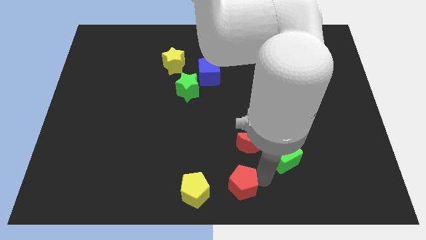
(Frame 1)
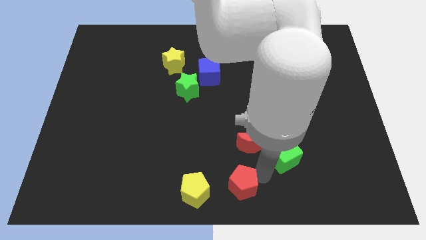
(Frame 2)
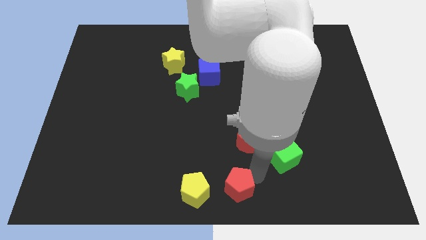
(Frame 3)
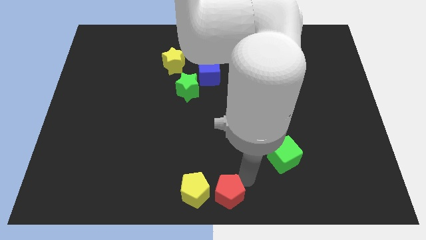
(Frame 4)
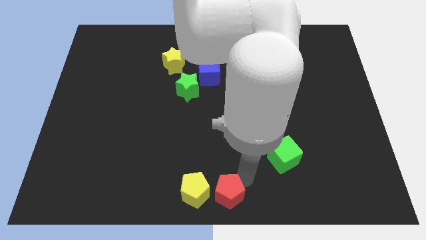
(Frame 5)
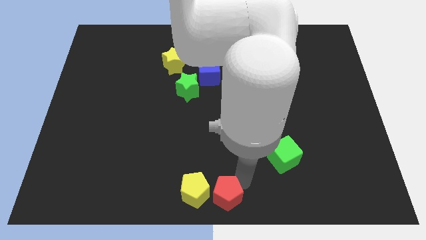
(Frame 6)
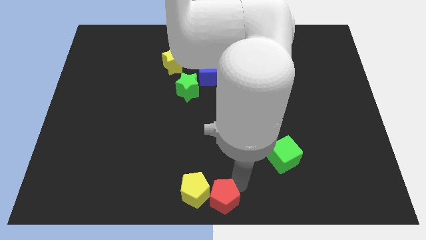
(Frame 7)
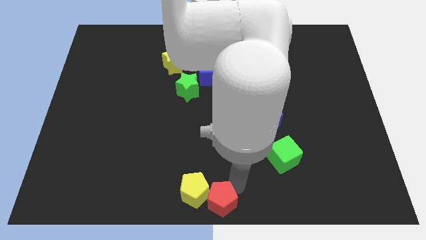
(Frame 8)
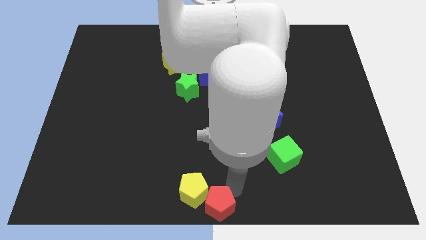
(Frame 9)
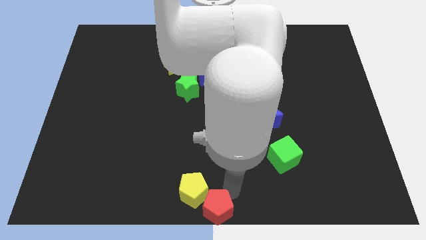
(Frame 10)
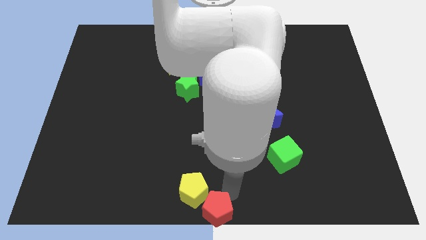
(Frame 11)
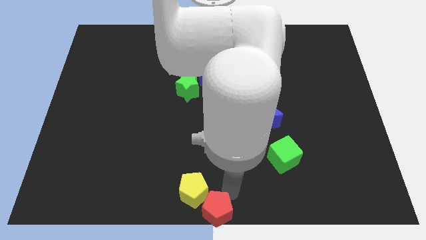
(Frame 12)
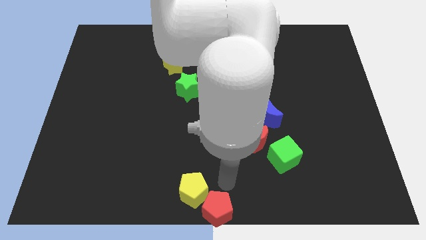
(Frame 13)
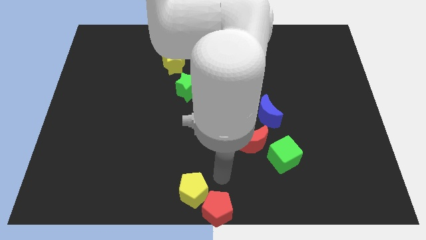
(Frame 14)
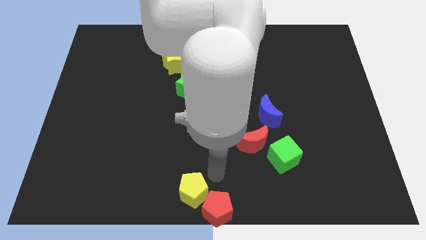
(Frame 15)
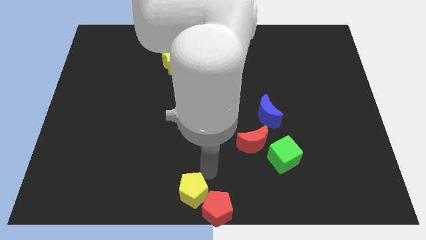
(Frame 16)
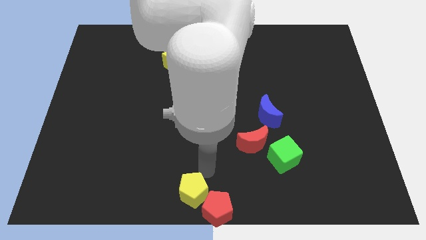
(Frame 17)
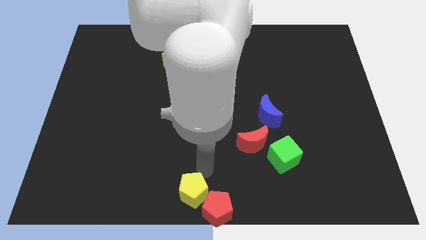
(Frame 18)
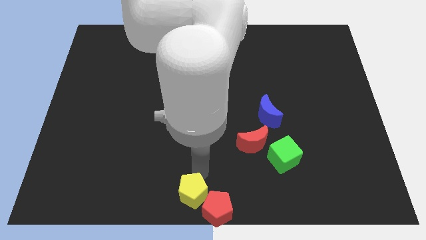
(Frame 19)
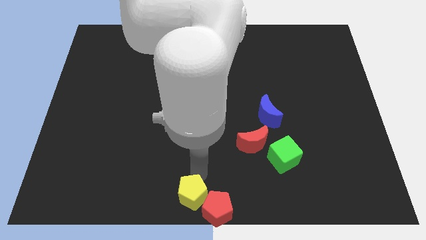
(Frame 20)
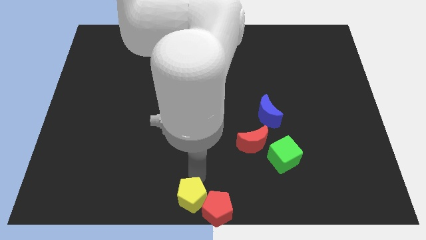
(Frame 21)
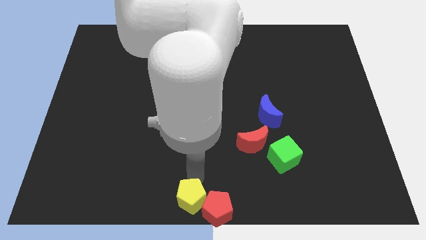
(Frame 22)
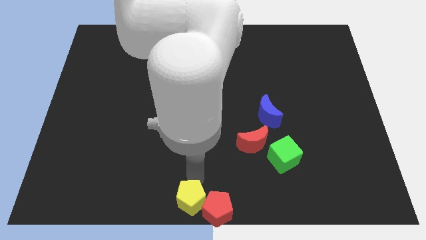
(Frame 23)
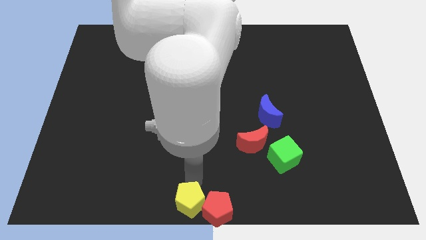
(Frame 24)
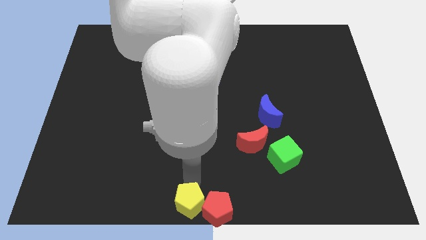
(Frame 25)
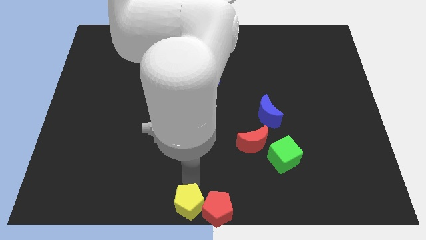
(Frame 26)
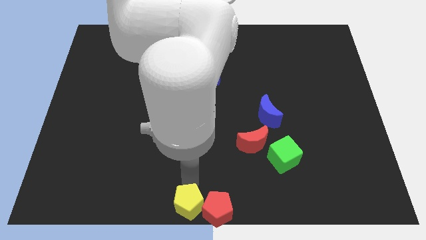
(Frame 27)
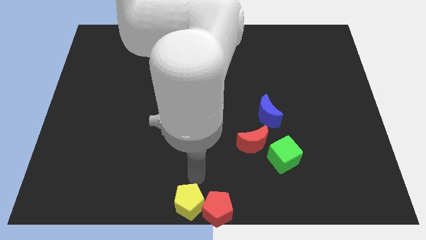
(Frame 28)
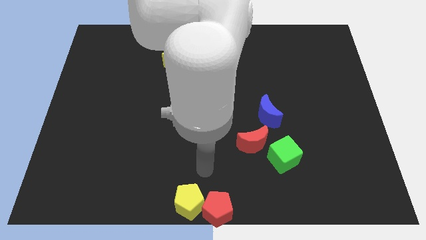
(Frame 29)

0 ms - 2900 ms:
move the red and yellow pentagons to the bottom center of the board

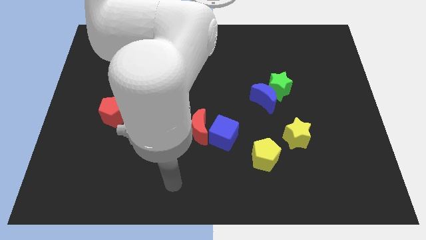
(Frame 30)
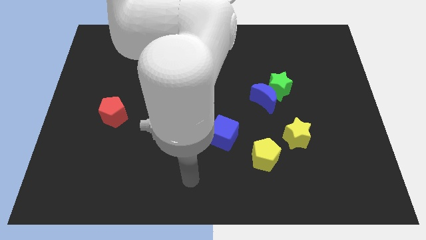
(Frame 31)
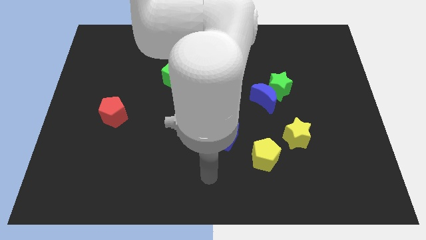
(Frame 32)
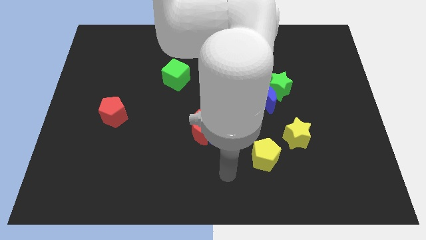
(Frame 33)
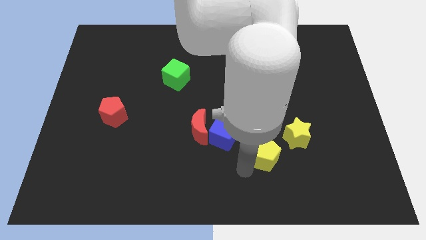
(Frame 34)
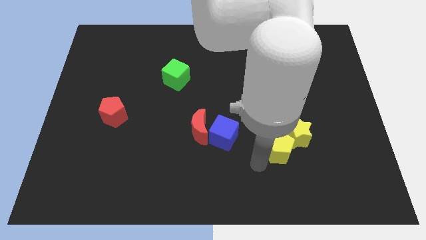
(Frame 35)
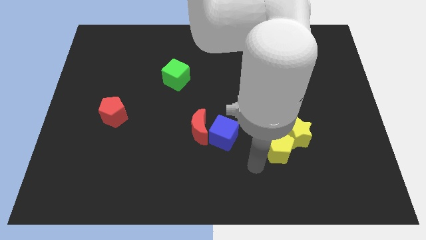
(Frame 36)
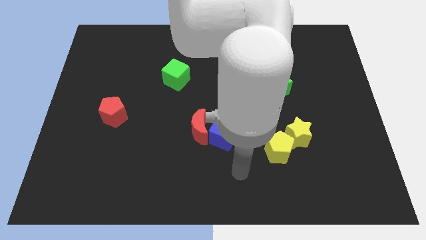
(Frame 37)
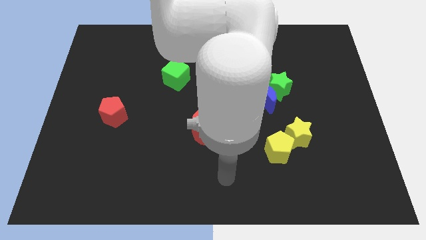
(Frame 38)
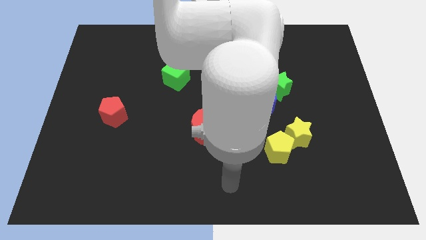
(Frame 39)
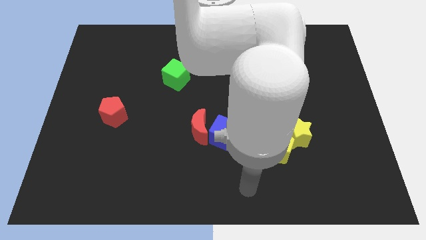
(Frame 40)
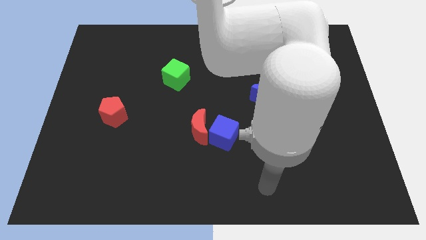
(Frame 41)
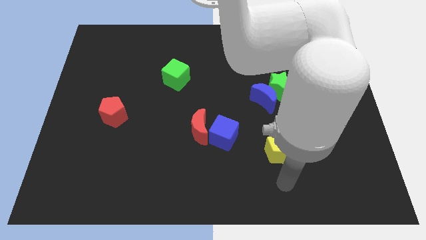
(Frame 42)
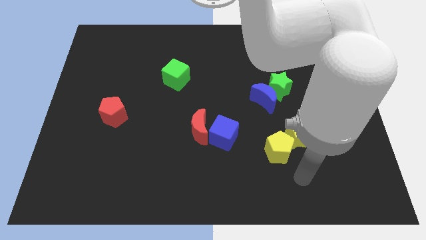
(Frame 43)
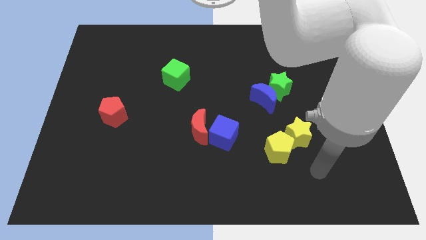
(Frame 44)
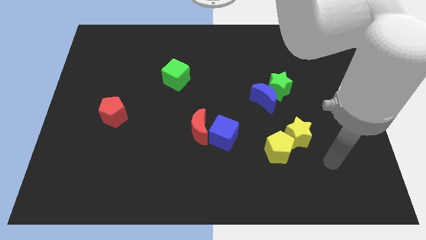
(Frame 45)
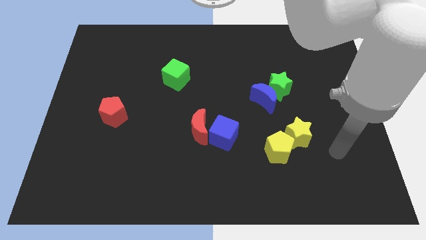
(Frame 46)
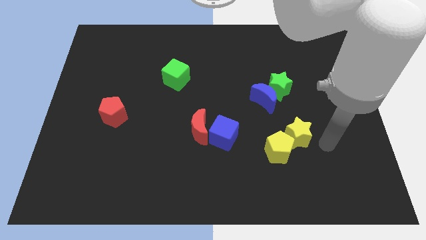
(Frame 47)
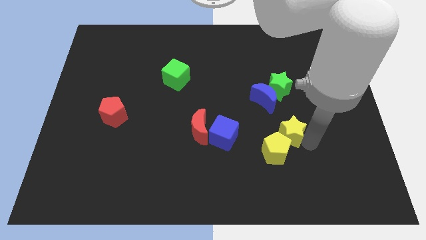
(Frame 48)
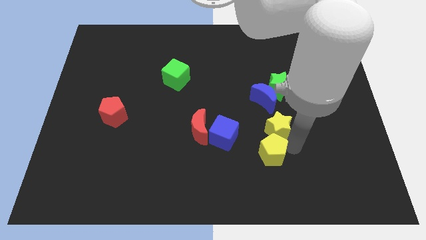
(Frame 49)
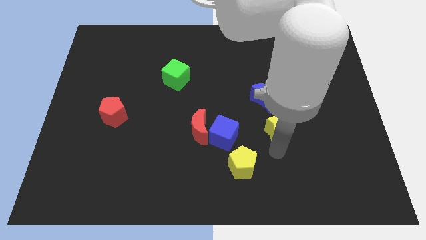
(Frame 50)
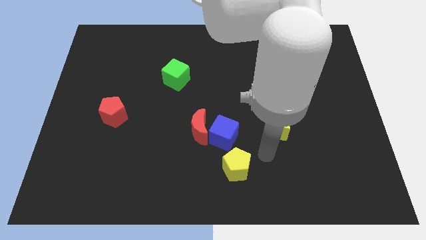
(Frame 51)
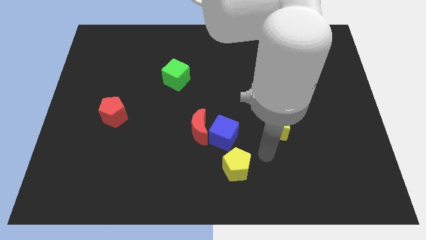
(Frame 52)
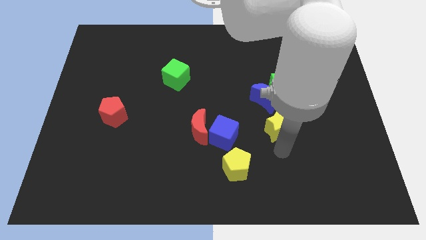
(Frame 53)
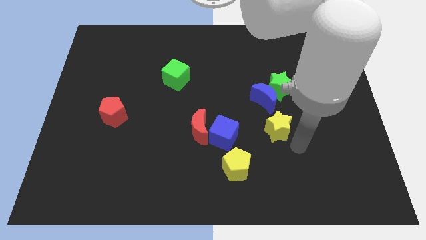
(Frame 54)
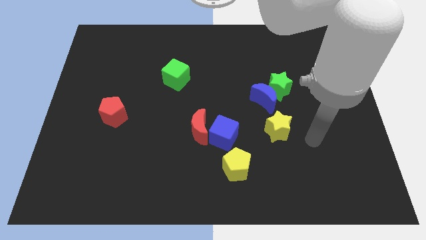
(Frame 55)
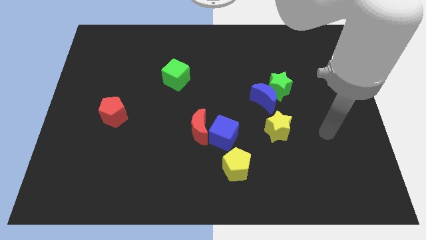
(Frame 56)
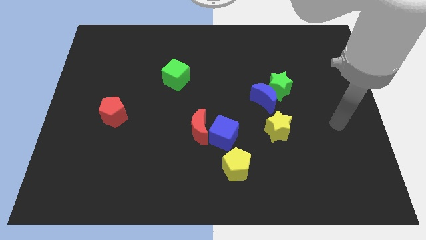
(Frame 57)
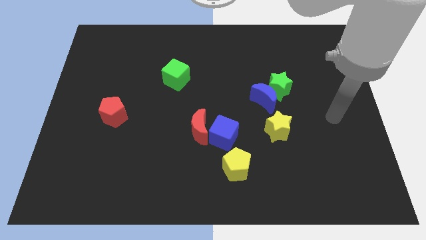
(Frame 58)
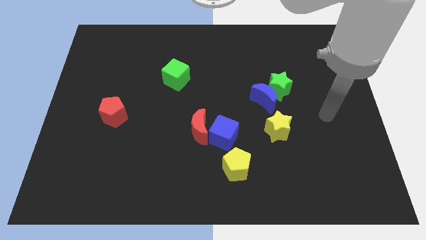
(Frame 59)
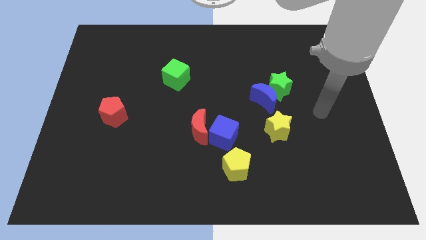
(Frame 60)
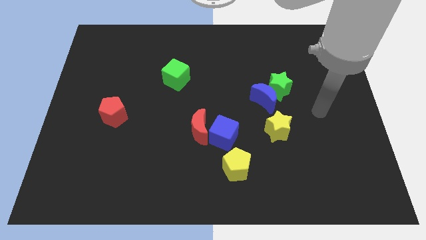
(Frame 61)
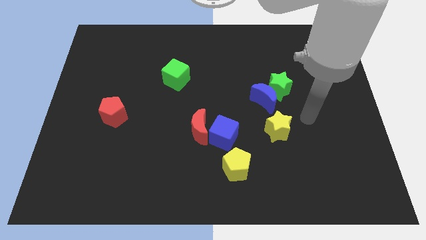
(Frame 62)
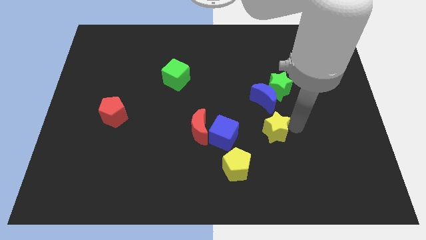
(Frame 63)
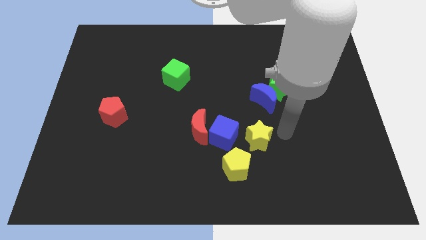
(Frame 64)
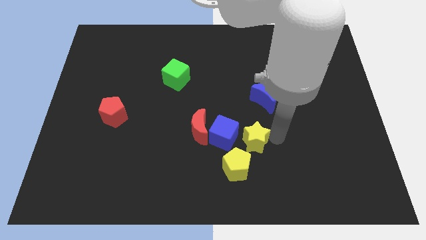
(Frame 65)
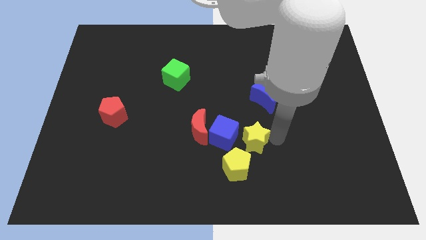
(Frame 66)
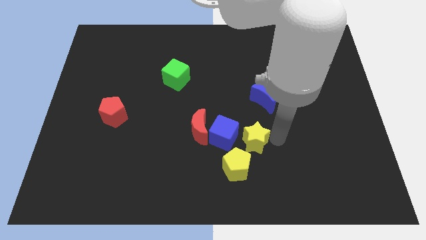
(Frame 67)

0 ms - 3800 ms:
move the yellow blocks near to the blue cube

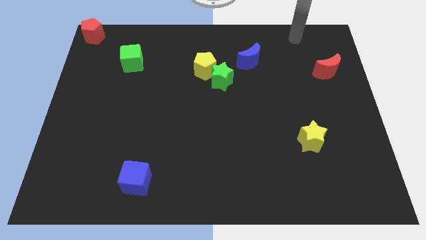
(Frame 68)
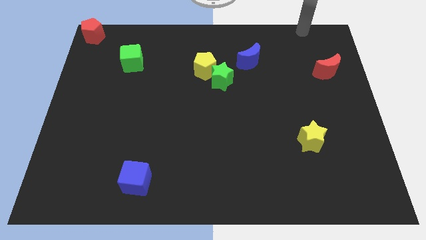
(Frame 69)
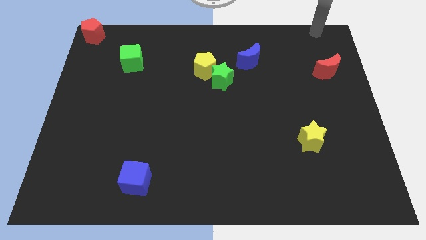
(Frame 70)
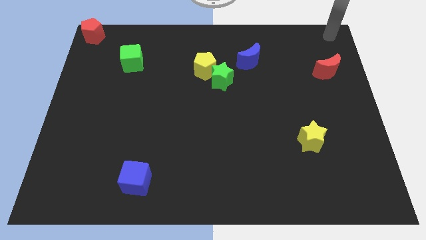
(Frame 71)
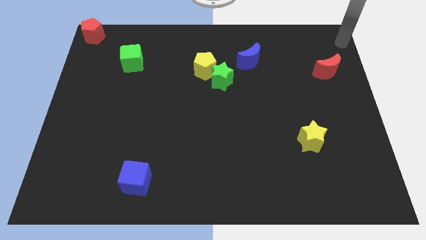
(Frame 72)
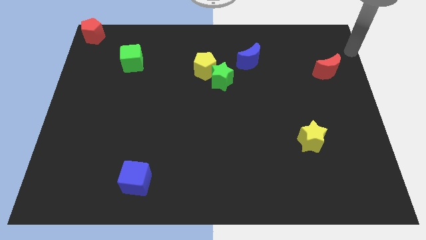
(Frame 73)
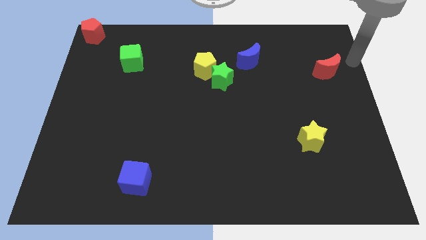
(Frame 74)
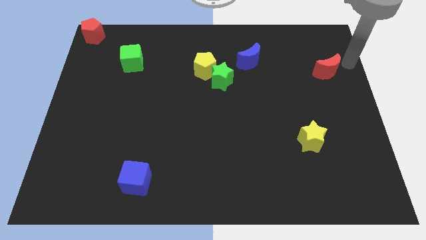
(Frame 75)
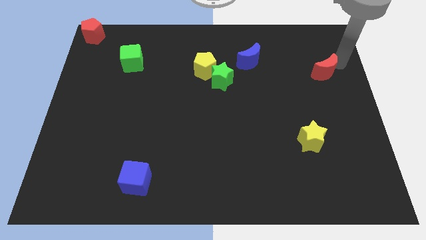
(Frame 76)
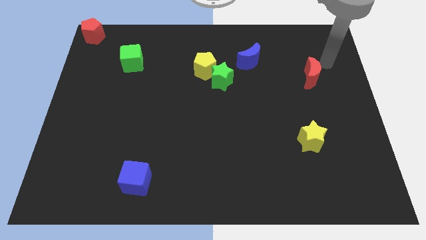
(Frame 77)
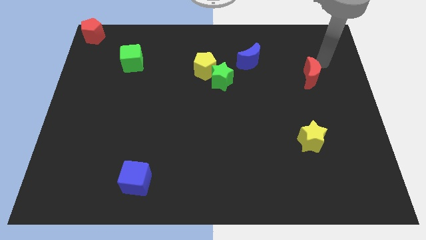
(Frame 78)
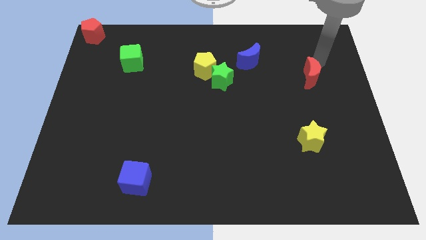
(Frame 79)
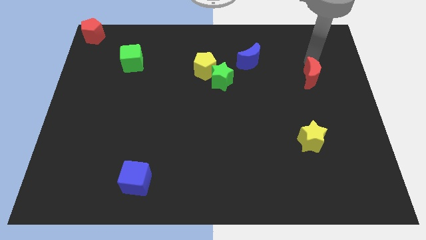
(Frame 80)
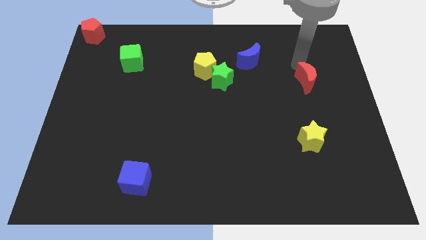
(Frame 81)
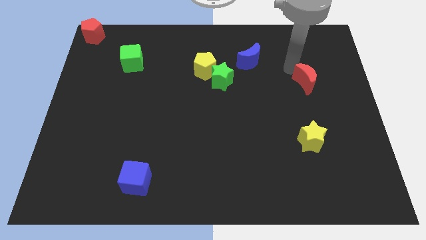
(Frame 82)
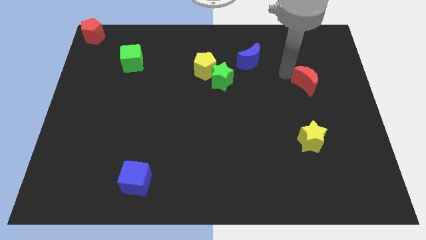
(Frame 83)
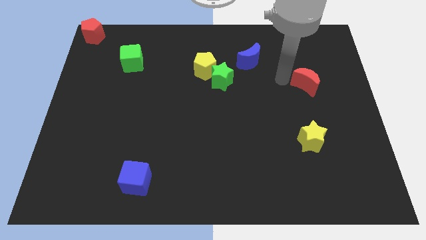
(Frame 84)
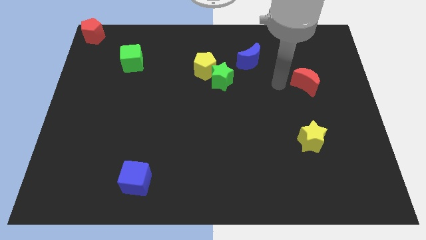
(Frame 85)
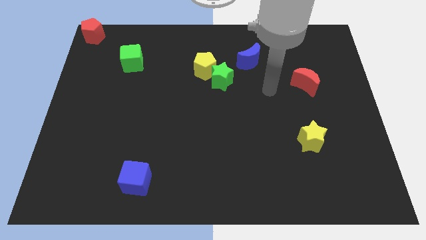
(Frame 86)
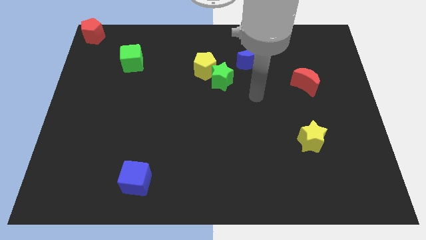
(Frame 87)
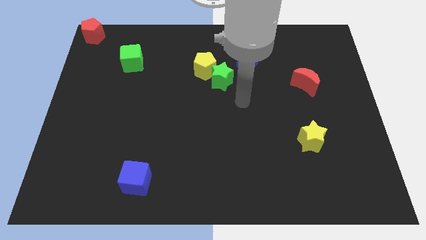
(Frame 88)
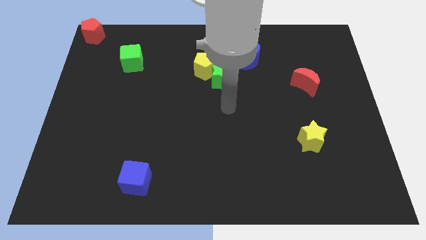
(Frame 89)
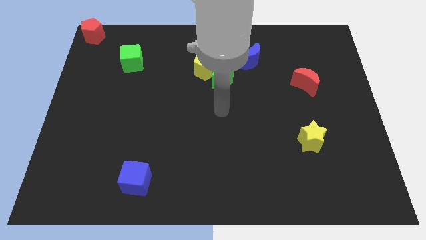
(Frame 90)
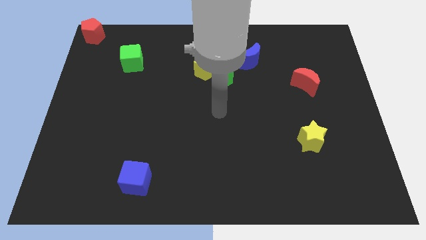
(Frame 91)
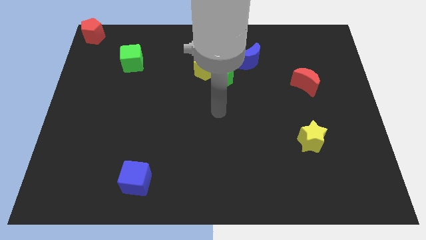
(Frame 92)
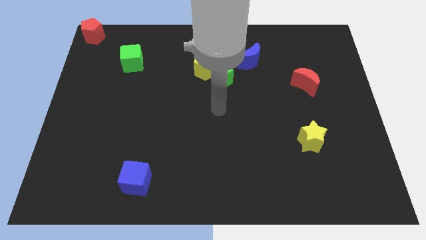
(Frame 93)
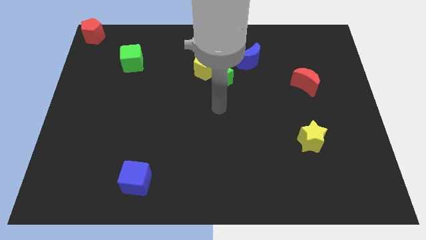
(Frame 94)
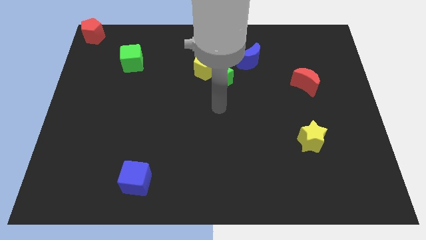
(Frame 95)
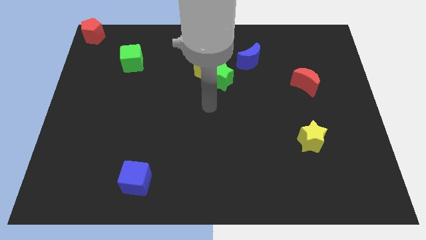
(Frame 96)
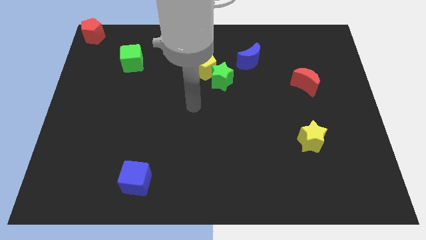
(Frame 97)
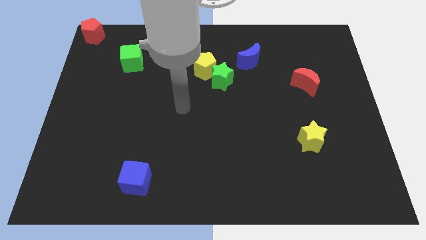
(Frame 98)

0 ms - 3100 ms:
place the red crescent parallel to green star
